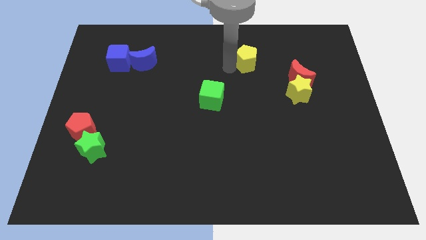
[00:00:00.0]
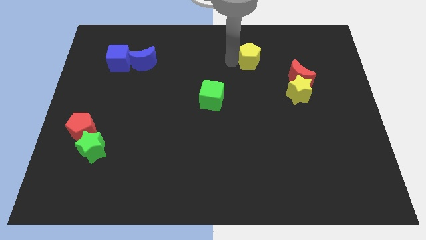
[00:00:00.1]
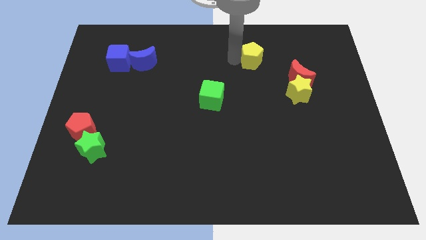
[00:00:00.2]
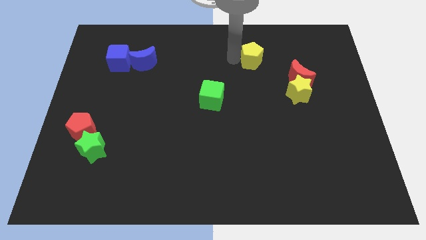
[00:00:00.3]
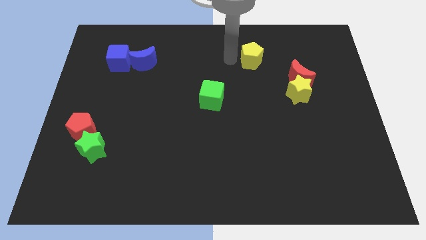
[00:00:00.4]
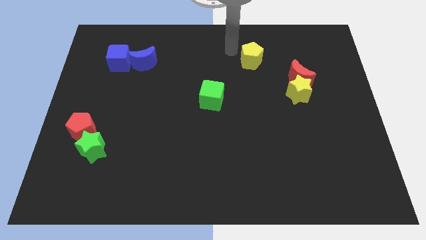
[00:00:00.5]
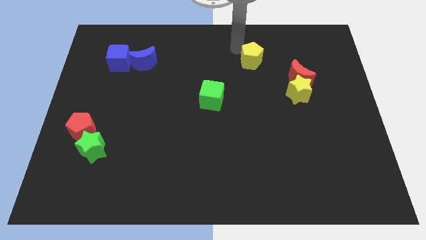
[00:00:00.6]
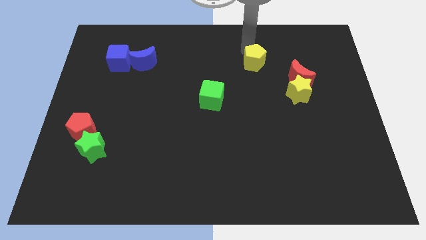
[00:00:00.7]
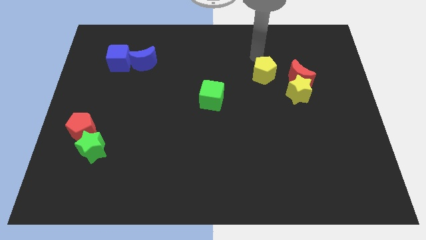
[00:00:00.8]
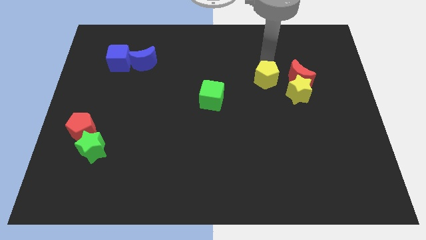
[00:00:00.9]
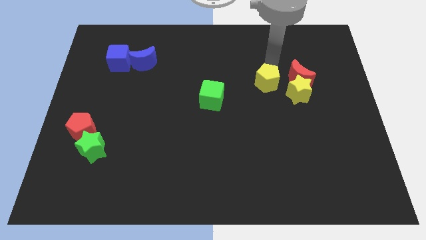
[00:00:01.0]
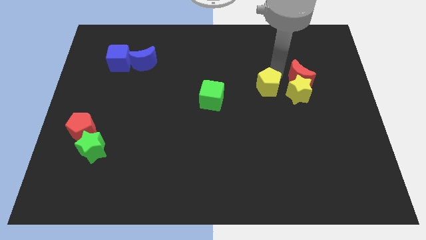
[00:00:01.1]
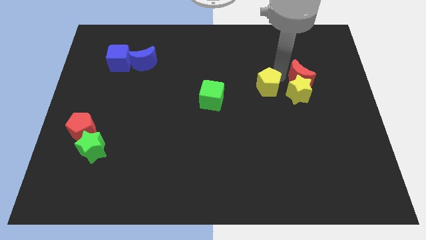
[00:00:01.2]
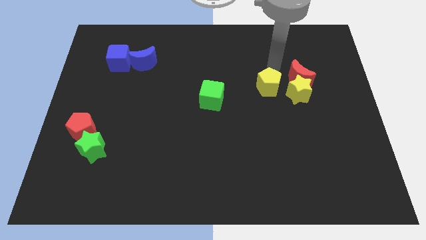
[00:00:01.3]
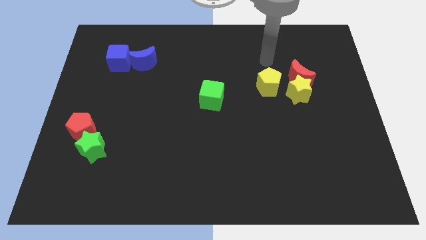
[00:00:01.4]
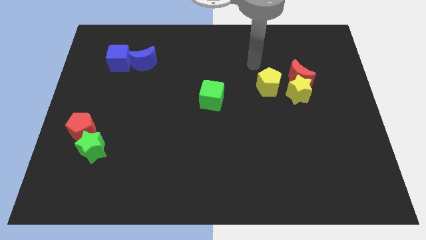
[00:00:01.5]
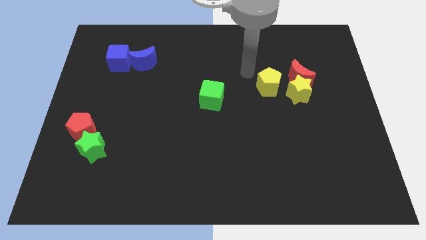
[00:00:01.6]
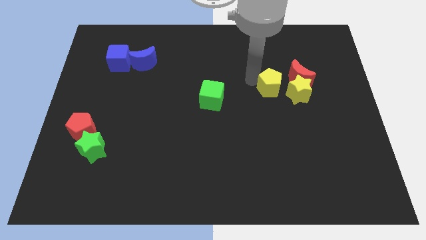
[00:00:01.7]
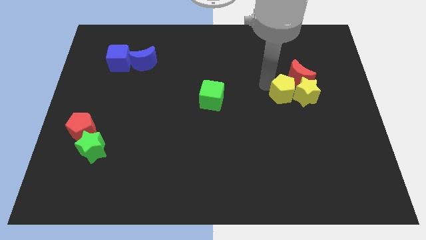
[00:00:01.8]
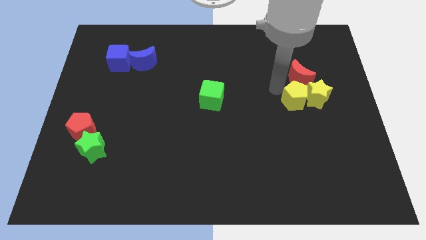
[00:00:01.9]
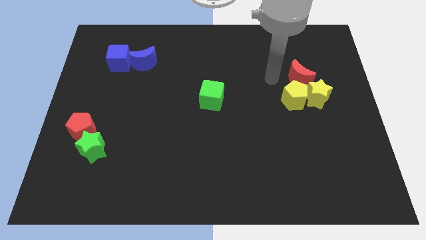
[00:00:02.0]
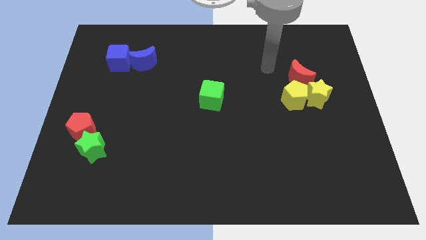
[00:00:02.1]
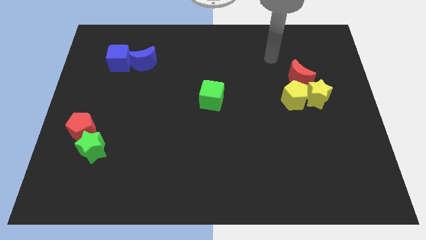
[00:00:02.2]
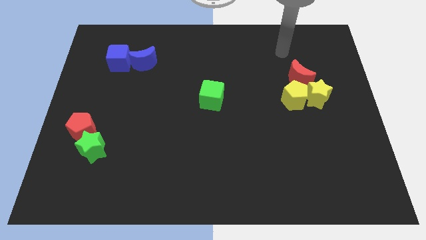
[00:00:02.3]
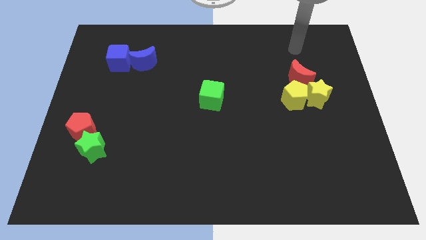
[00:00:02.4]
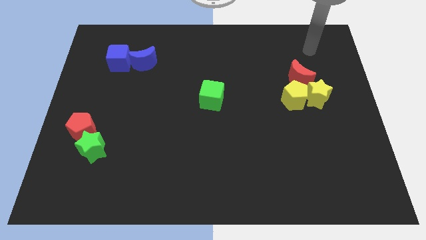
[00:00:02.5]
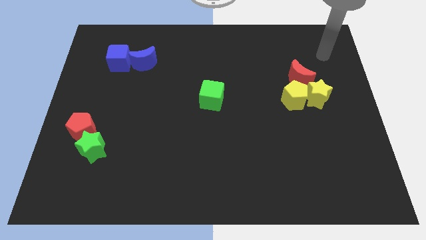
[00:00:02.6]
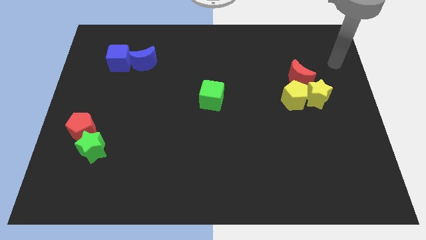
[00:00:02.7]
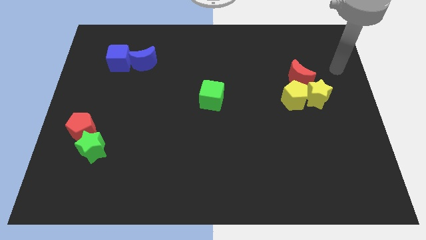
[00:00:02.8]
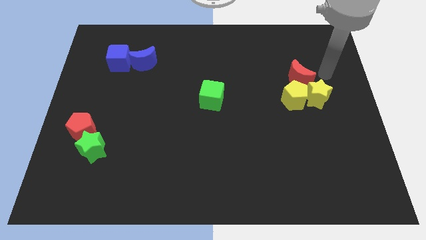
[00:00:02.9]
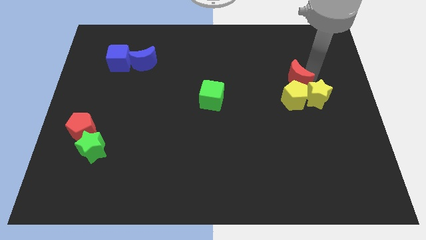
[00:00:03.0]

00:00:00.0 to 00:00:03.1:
group up the three blocks

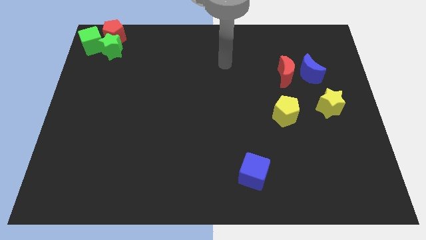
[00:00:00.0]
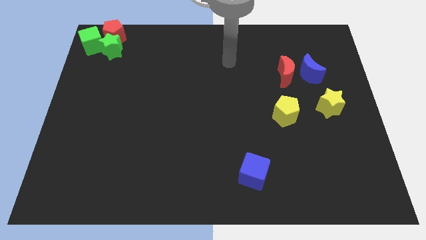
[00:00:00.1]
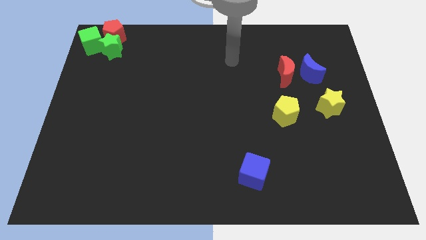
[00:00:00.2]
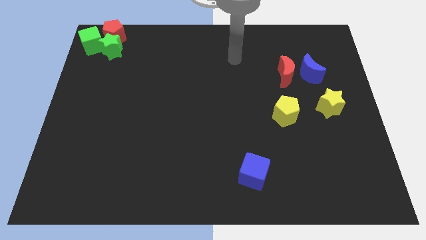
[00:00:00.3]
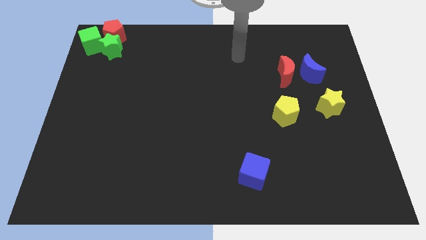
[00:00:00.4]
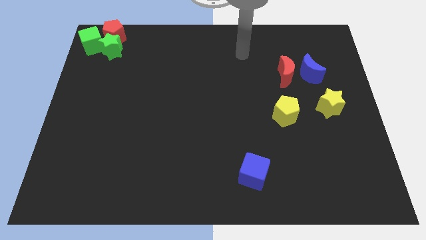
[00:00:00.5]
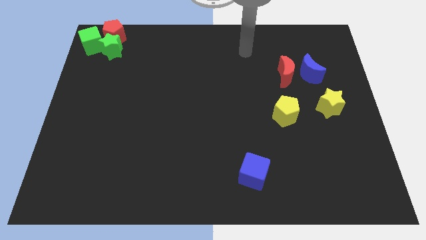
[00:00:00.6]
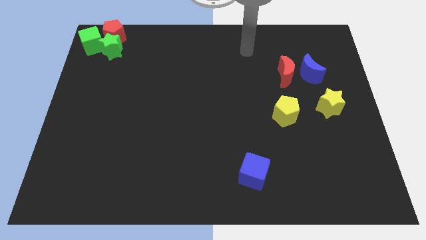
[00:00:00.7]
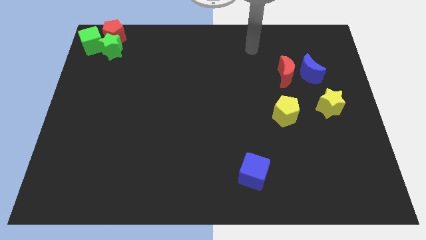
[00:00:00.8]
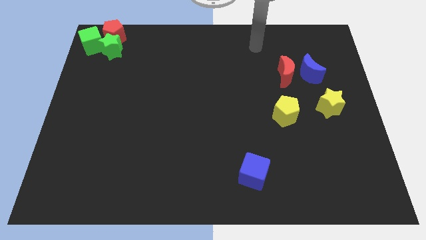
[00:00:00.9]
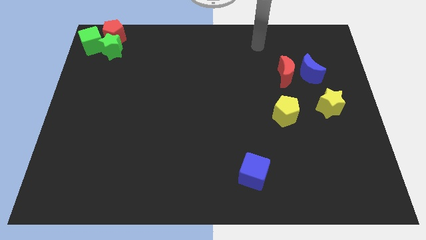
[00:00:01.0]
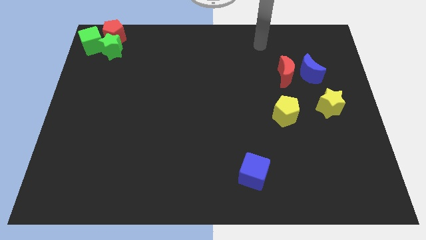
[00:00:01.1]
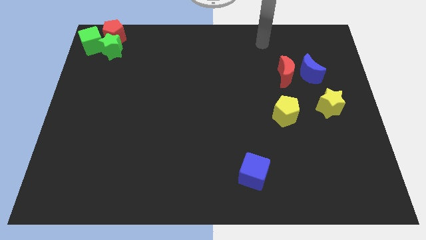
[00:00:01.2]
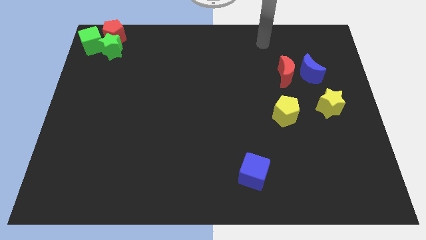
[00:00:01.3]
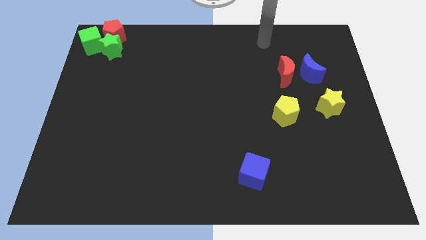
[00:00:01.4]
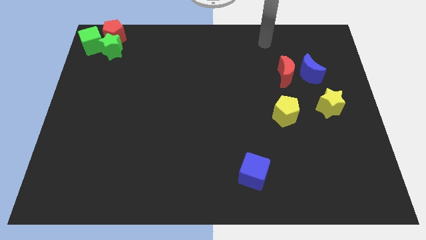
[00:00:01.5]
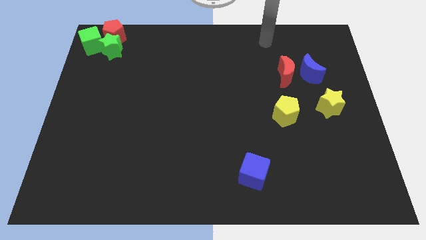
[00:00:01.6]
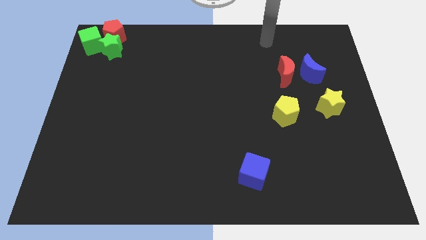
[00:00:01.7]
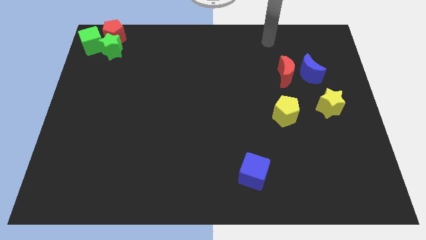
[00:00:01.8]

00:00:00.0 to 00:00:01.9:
move your arm to top of the red crescent

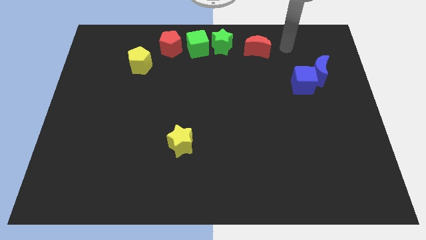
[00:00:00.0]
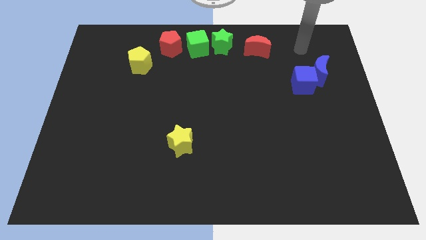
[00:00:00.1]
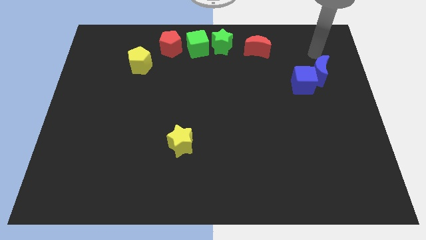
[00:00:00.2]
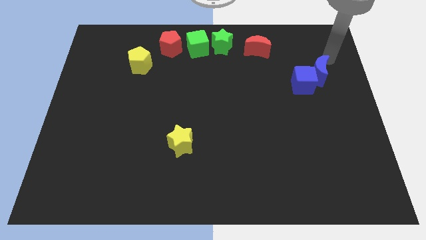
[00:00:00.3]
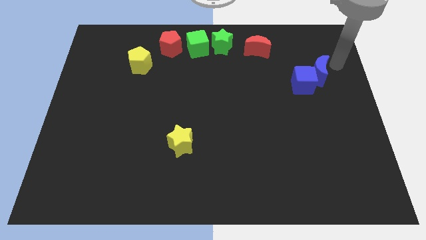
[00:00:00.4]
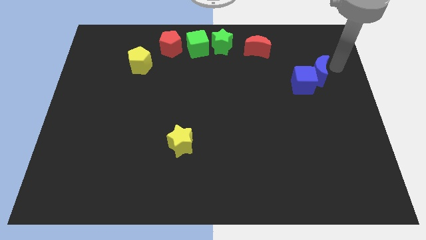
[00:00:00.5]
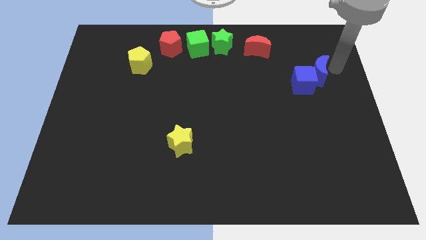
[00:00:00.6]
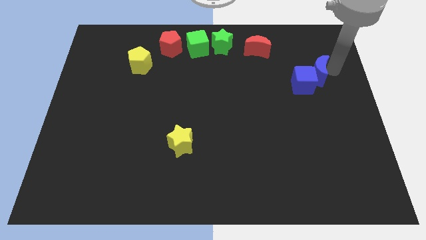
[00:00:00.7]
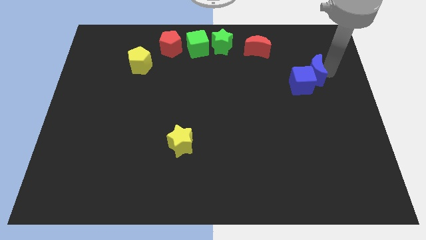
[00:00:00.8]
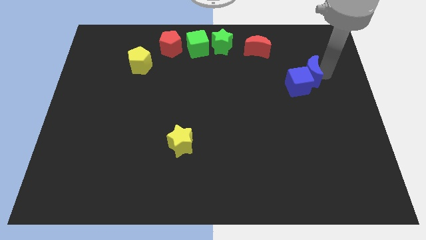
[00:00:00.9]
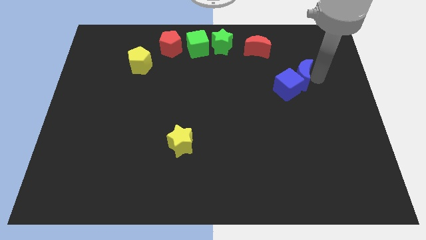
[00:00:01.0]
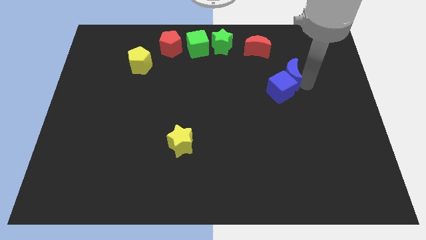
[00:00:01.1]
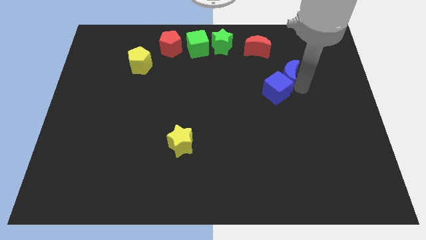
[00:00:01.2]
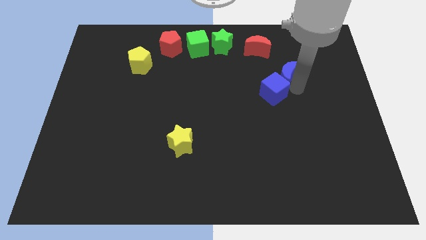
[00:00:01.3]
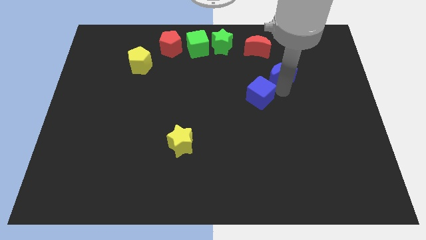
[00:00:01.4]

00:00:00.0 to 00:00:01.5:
drag blue blocks slightly toward the left

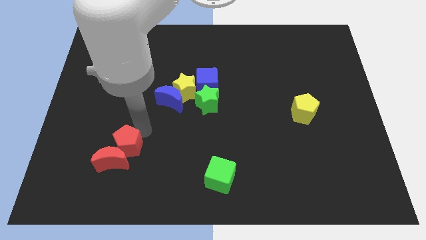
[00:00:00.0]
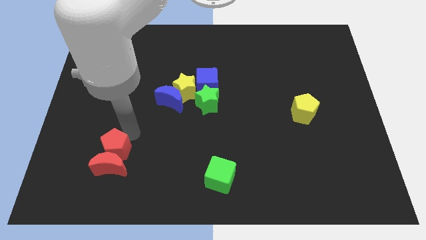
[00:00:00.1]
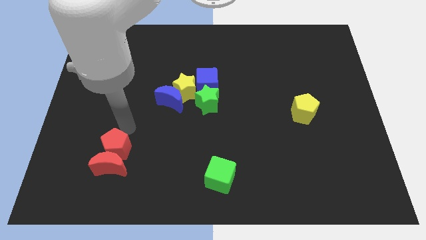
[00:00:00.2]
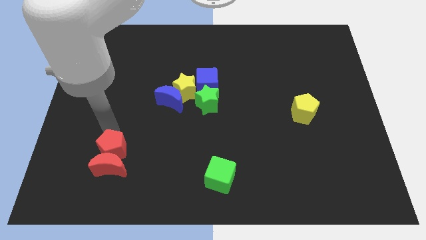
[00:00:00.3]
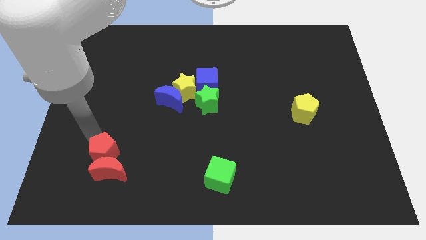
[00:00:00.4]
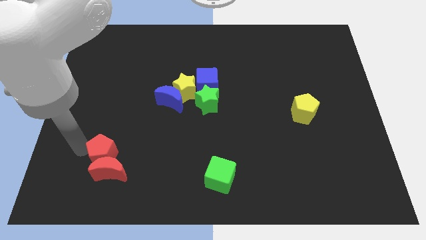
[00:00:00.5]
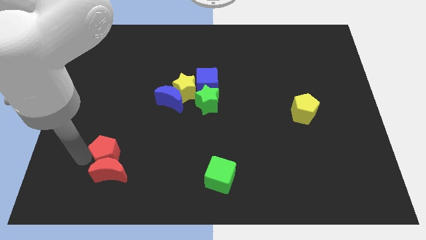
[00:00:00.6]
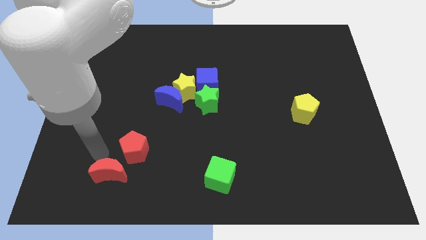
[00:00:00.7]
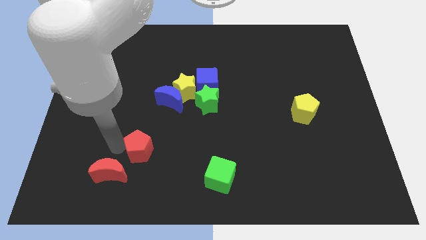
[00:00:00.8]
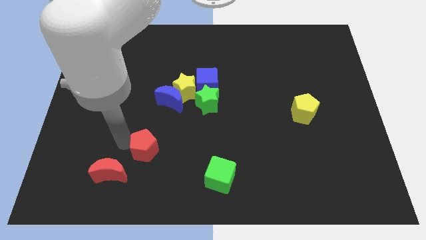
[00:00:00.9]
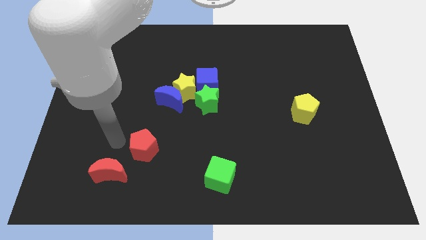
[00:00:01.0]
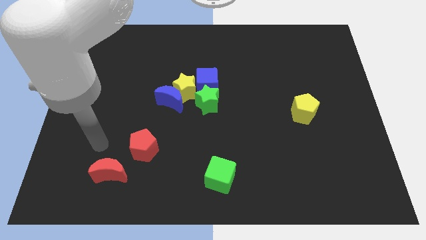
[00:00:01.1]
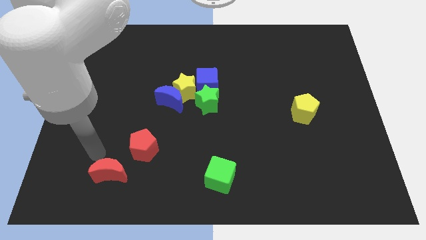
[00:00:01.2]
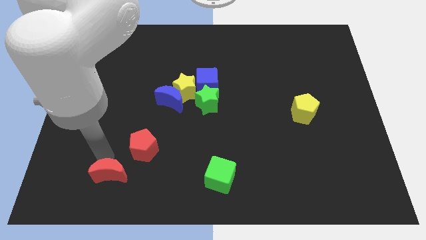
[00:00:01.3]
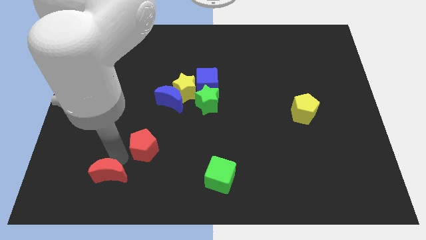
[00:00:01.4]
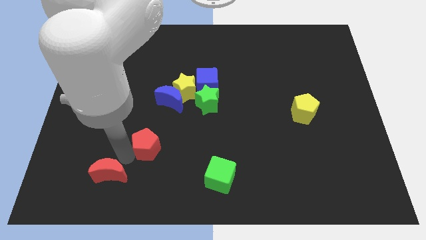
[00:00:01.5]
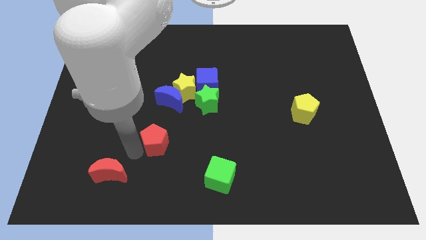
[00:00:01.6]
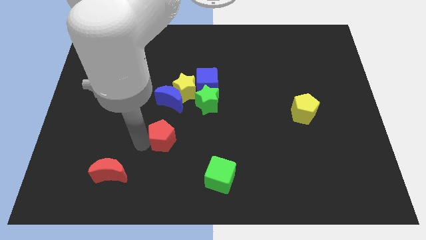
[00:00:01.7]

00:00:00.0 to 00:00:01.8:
push red pentagon below blue crescent

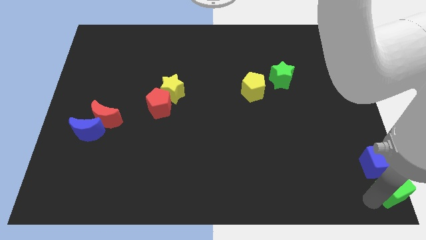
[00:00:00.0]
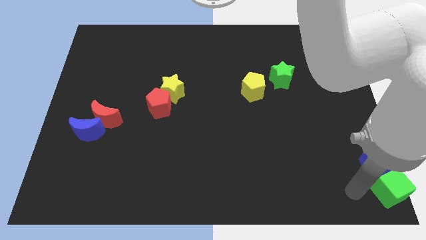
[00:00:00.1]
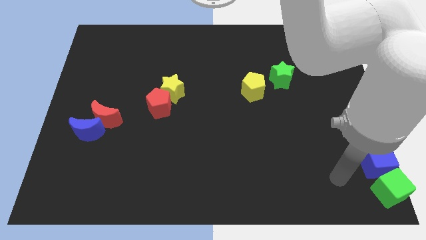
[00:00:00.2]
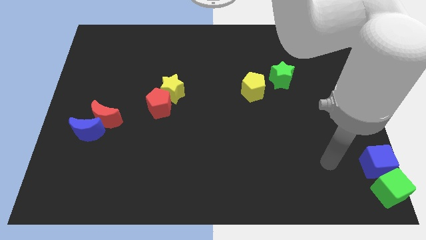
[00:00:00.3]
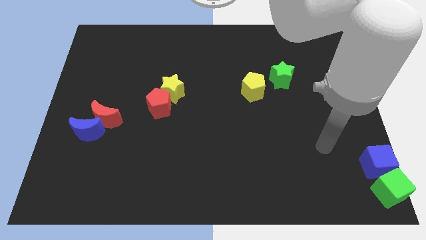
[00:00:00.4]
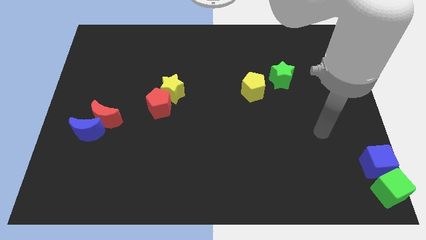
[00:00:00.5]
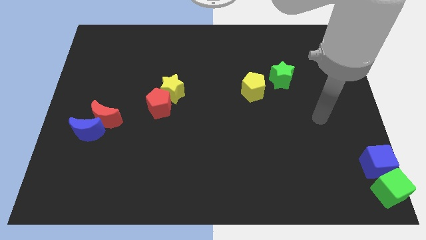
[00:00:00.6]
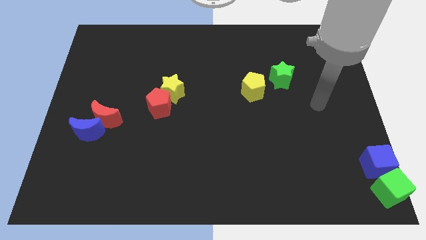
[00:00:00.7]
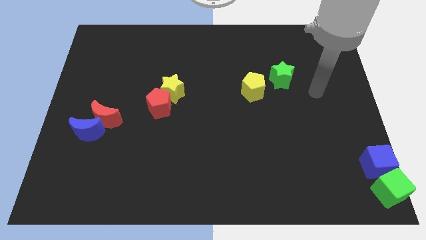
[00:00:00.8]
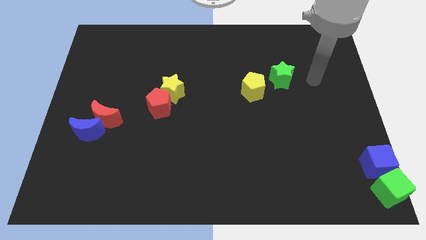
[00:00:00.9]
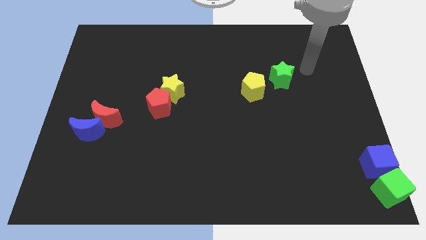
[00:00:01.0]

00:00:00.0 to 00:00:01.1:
move your arm to the right of green star
